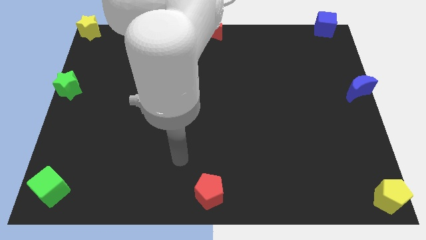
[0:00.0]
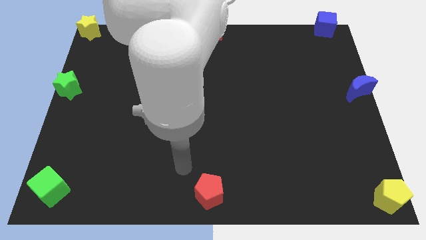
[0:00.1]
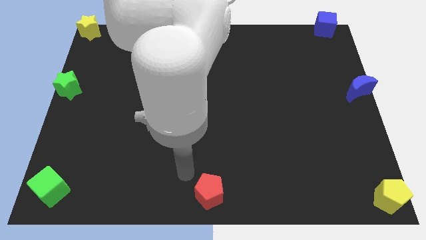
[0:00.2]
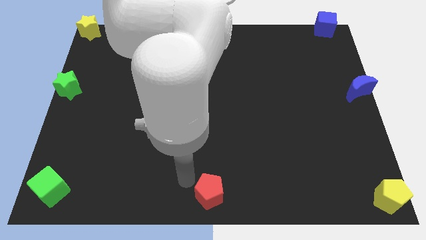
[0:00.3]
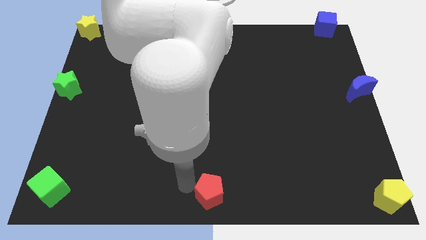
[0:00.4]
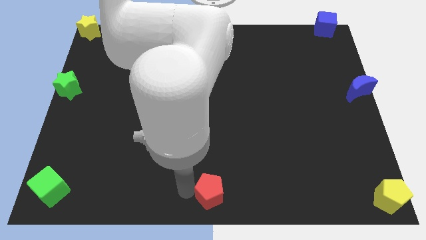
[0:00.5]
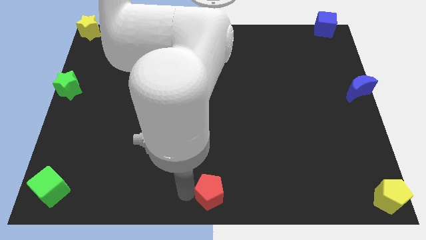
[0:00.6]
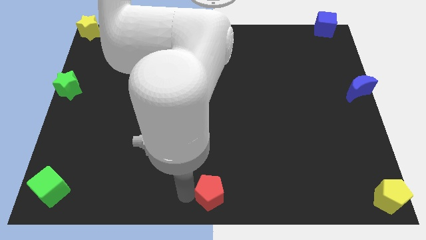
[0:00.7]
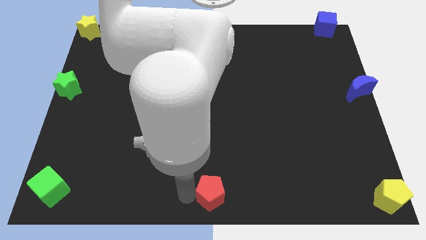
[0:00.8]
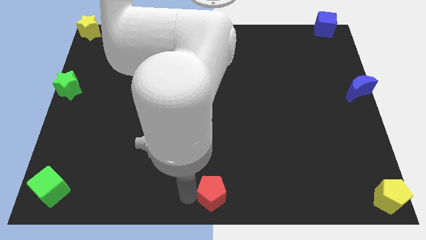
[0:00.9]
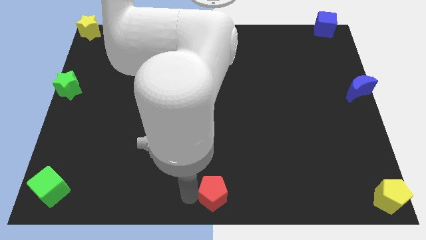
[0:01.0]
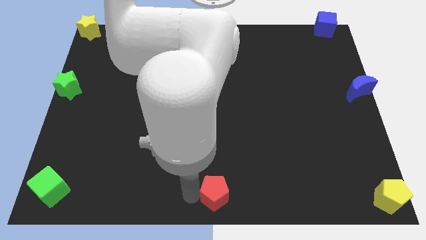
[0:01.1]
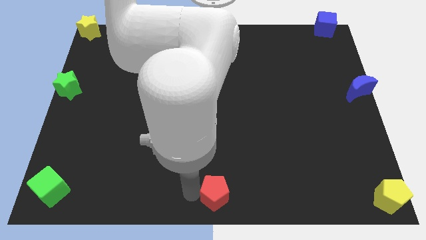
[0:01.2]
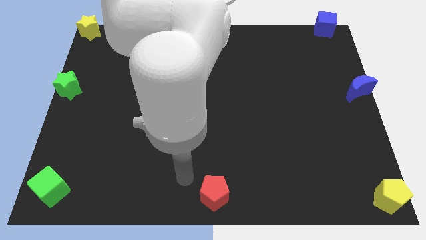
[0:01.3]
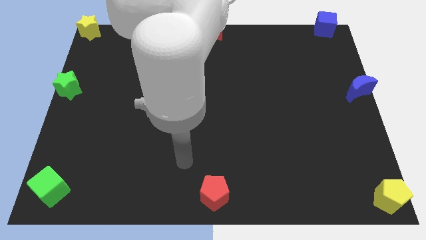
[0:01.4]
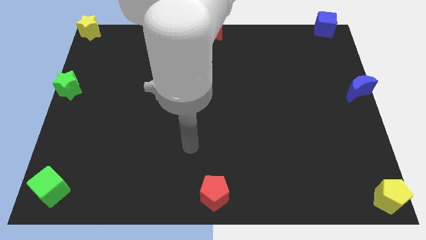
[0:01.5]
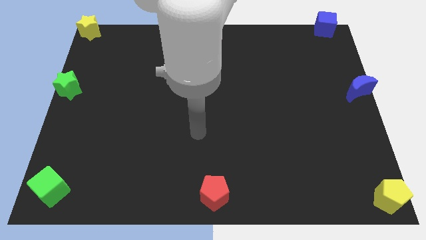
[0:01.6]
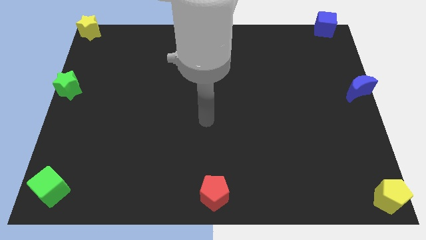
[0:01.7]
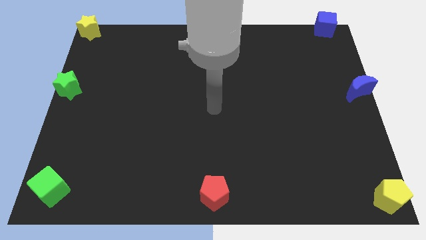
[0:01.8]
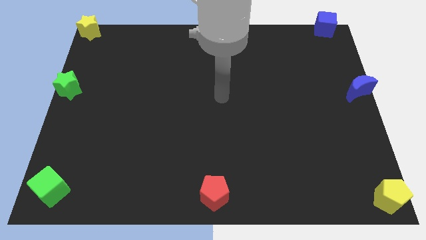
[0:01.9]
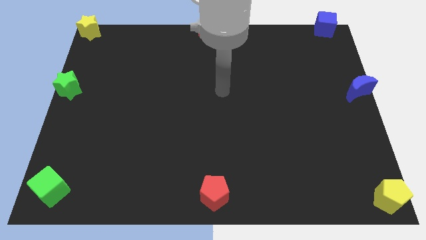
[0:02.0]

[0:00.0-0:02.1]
adjust the red pentagon at the bottom center of the board

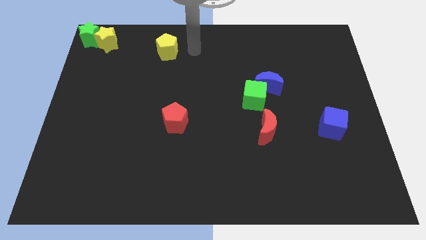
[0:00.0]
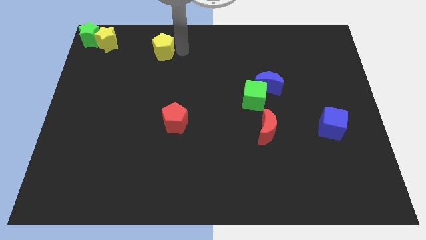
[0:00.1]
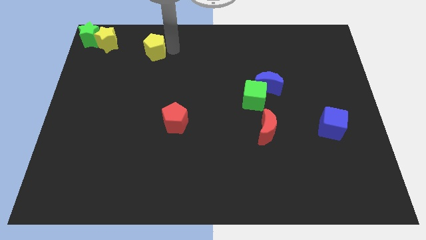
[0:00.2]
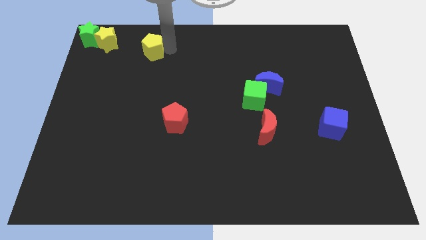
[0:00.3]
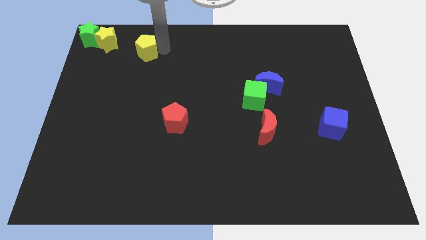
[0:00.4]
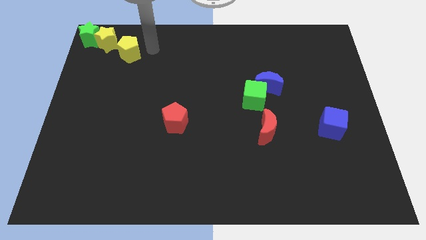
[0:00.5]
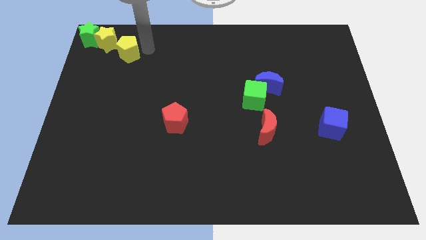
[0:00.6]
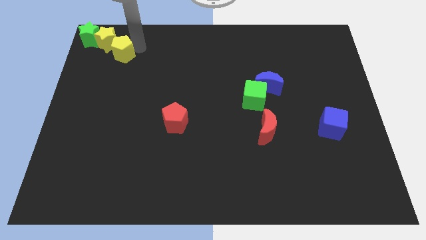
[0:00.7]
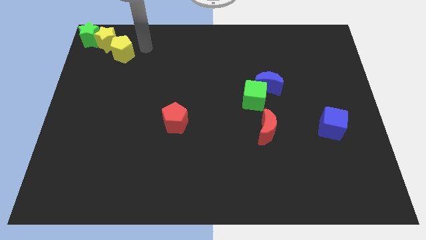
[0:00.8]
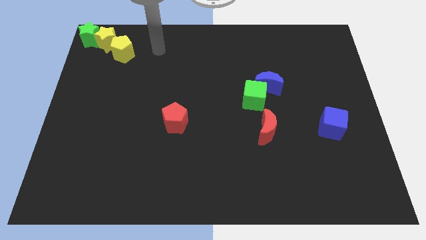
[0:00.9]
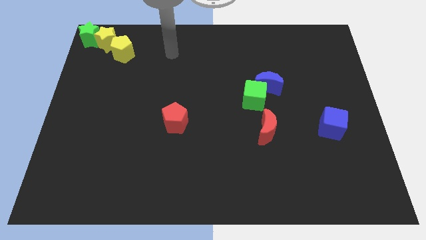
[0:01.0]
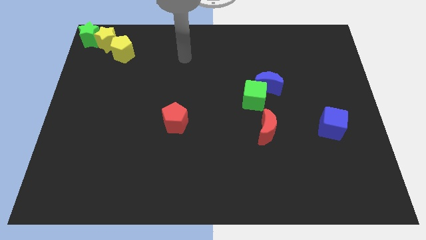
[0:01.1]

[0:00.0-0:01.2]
move the yellow pentagon close to the yellow star

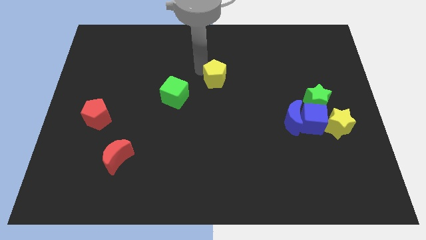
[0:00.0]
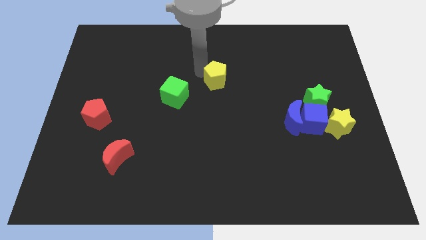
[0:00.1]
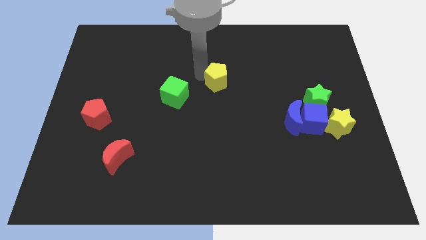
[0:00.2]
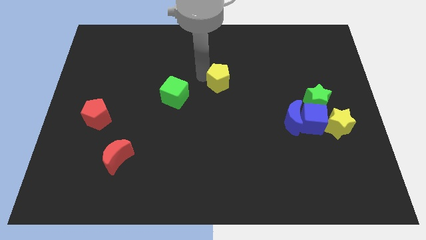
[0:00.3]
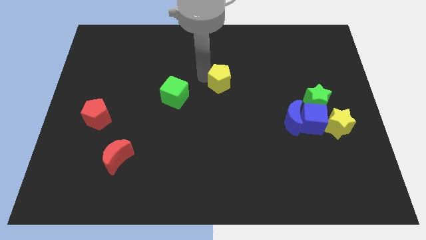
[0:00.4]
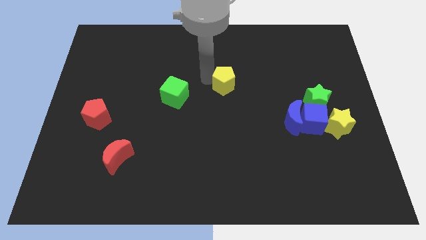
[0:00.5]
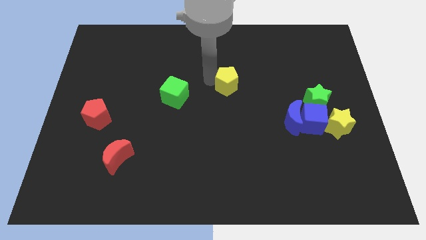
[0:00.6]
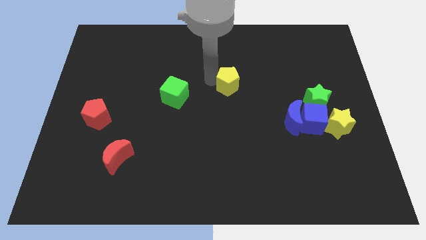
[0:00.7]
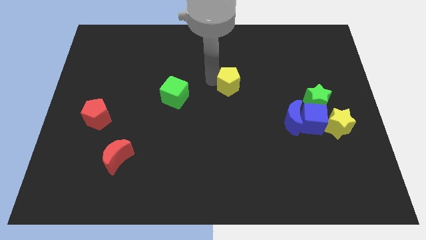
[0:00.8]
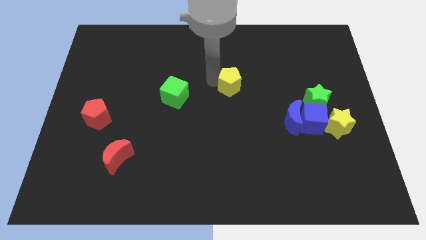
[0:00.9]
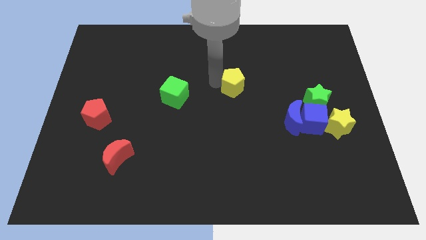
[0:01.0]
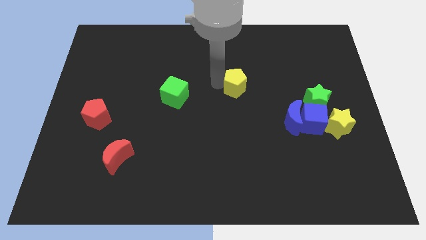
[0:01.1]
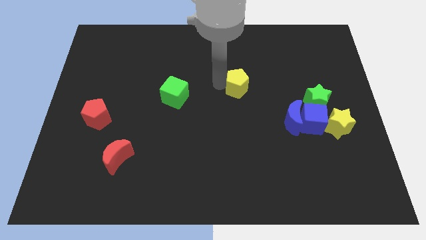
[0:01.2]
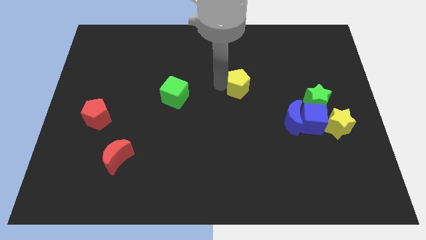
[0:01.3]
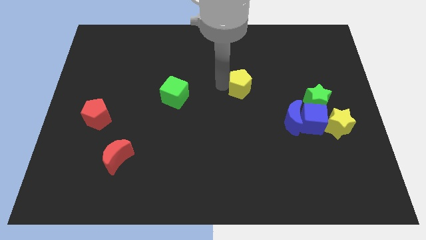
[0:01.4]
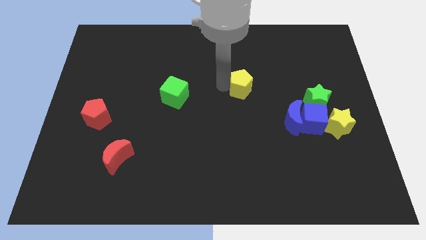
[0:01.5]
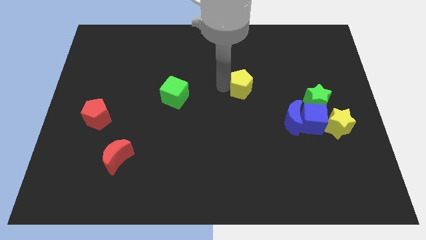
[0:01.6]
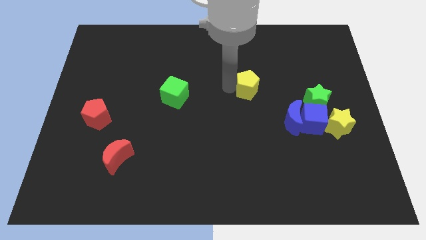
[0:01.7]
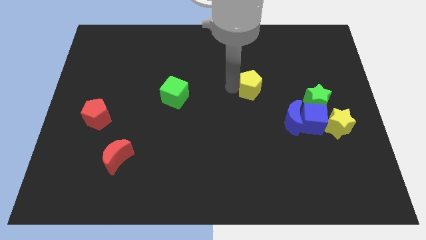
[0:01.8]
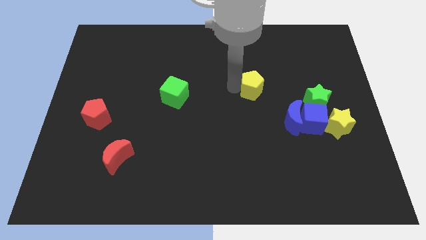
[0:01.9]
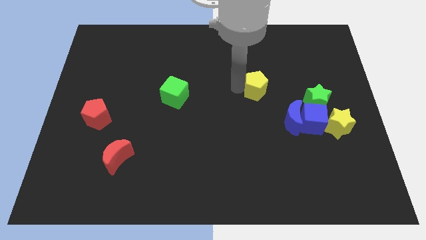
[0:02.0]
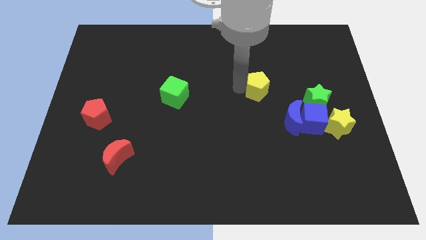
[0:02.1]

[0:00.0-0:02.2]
move the yellow pentagon to the right of the board

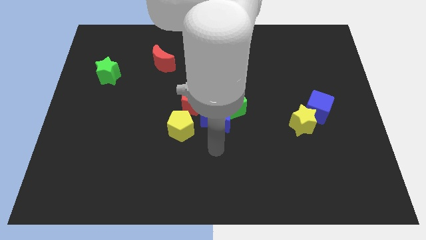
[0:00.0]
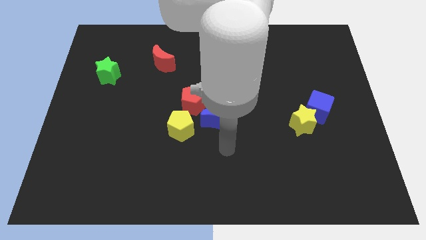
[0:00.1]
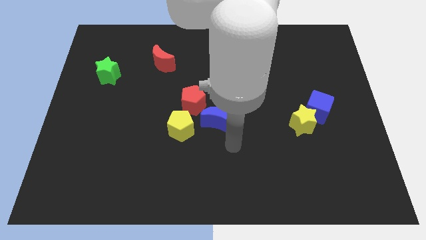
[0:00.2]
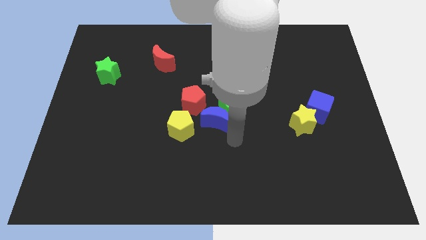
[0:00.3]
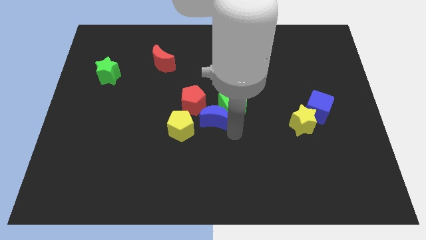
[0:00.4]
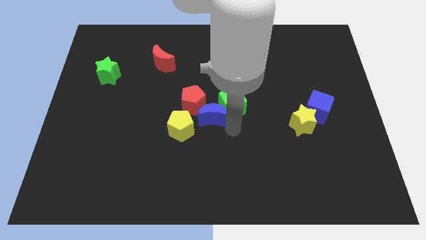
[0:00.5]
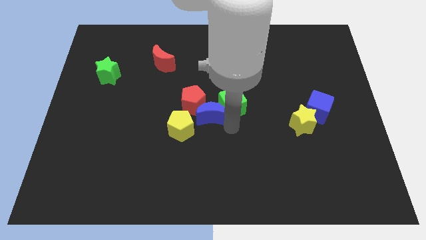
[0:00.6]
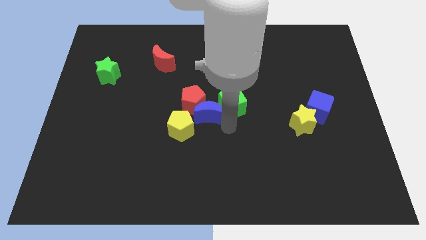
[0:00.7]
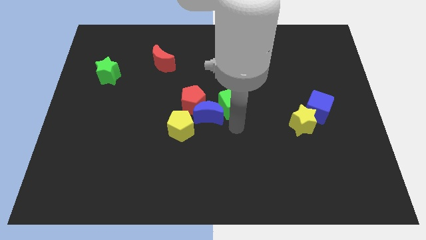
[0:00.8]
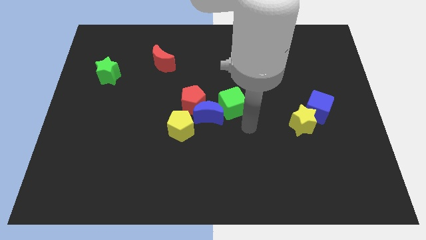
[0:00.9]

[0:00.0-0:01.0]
move the blue moon in between the yellow pentagon and green cube

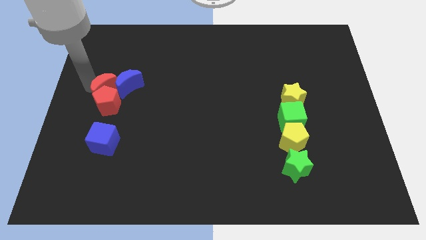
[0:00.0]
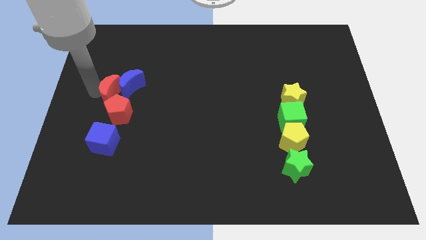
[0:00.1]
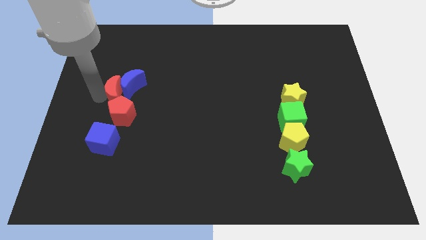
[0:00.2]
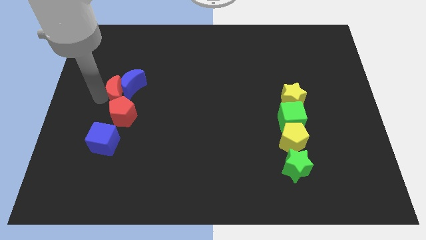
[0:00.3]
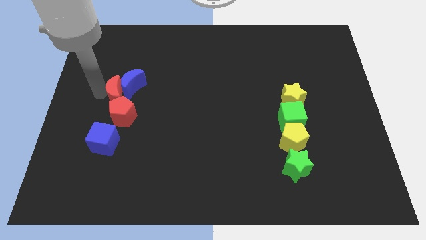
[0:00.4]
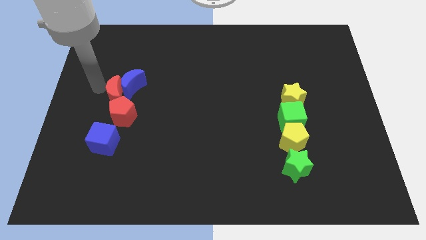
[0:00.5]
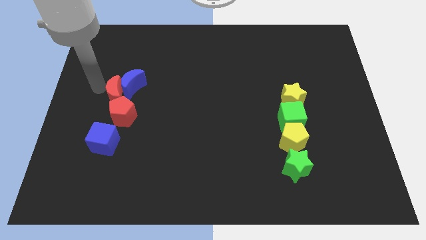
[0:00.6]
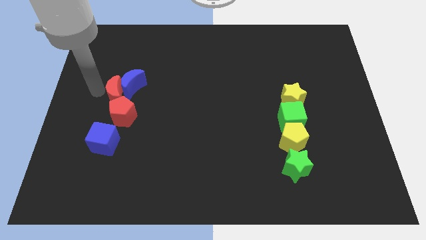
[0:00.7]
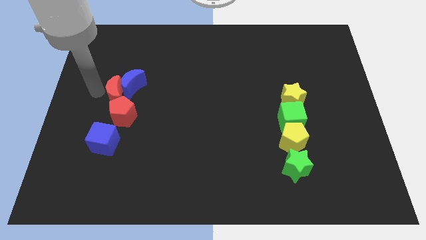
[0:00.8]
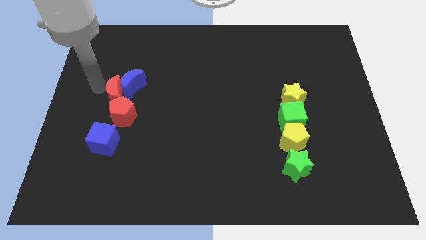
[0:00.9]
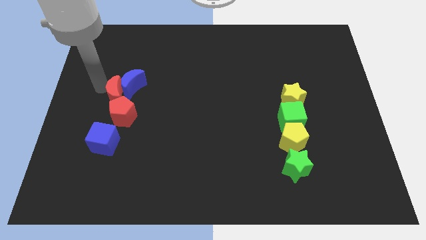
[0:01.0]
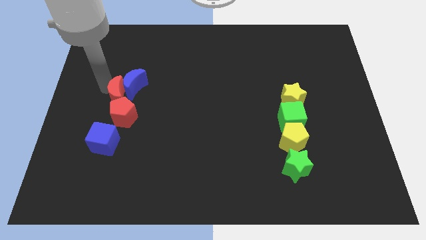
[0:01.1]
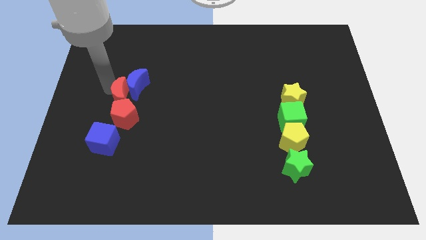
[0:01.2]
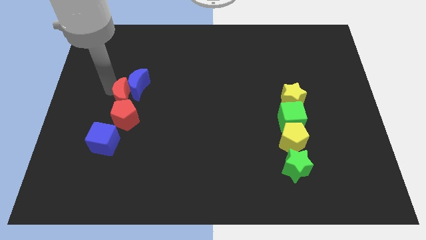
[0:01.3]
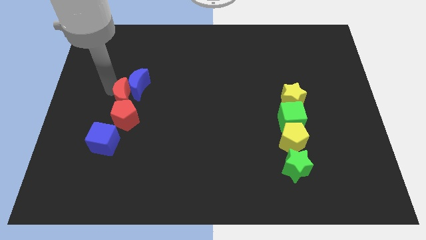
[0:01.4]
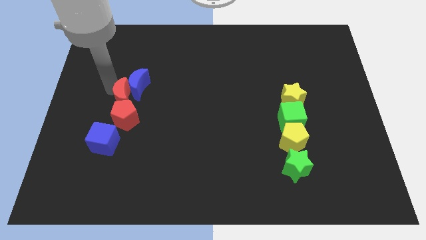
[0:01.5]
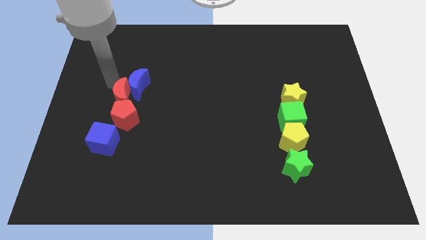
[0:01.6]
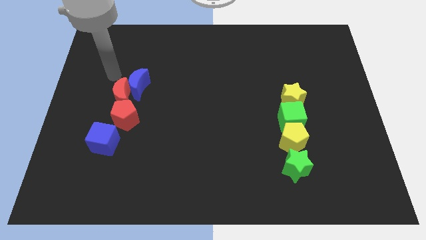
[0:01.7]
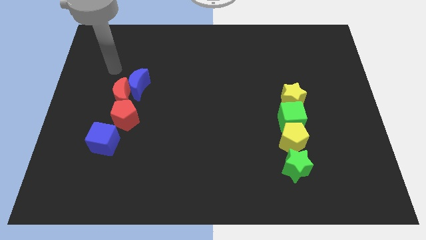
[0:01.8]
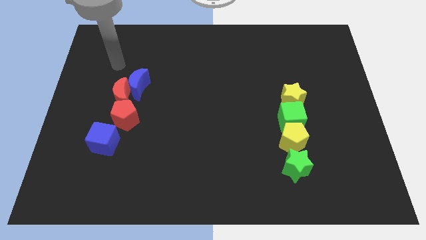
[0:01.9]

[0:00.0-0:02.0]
push the red crescent slightly right

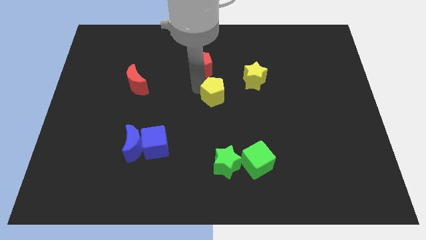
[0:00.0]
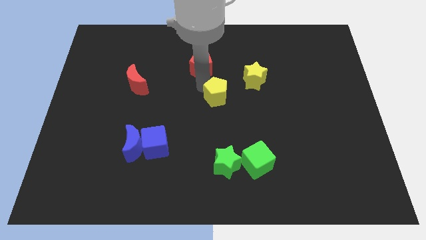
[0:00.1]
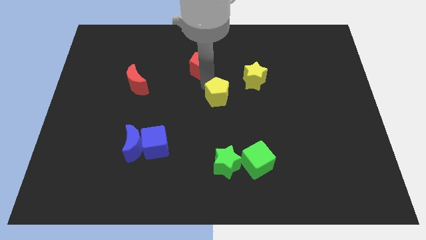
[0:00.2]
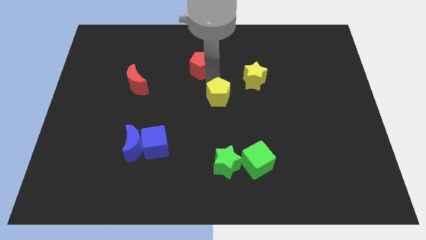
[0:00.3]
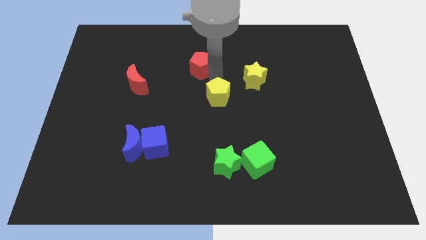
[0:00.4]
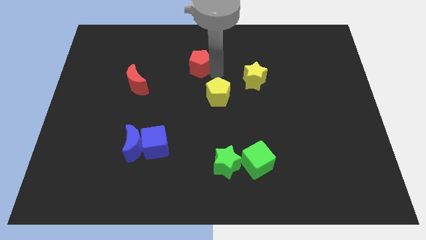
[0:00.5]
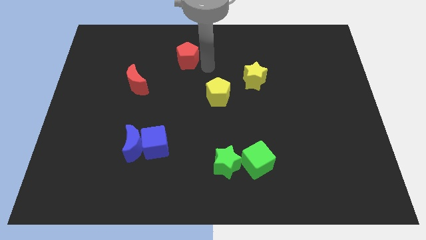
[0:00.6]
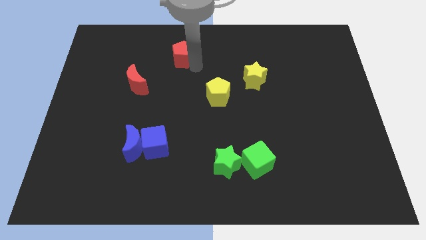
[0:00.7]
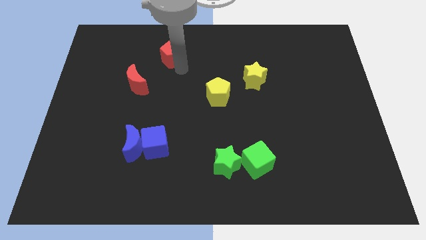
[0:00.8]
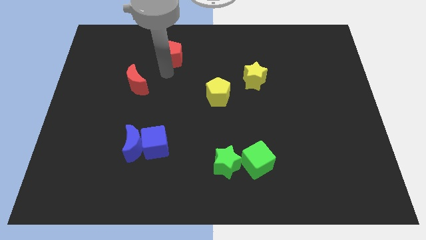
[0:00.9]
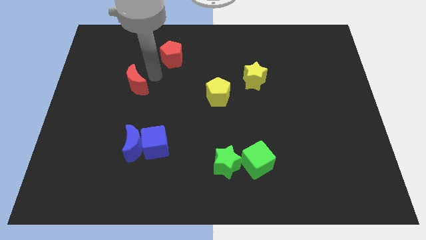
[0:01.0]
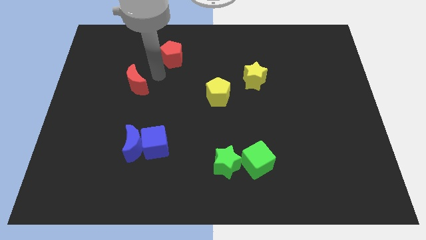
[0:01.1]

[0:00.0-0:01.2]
push the red pentagon to the top right of the red crescent
